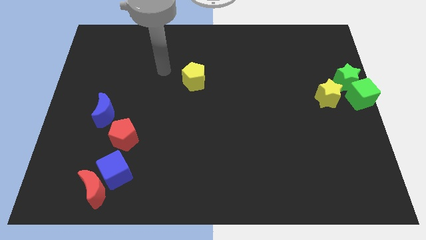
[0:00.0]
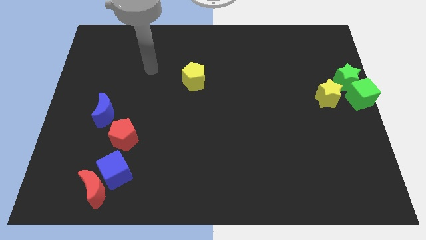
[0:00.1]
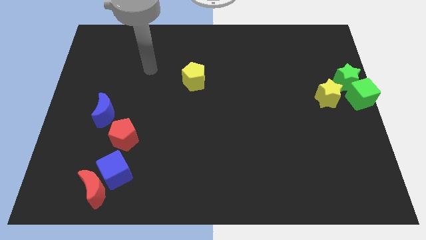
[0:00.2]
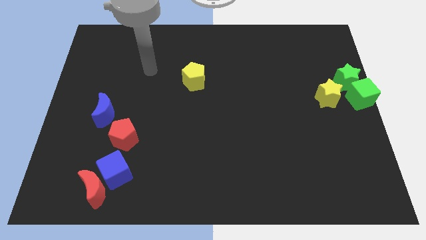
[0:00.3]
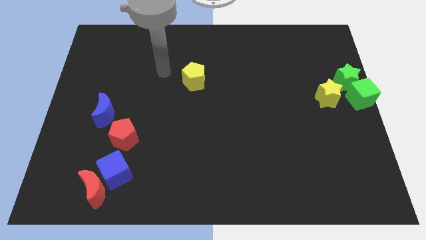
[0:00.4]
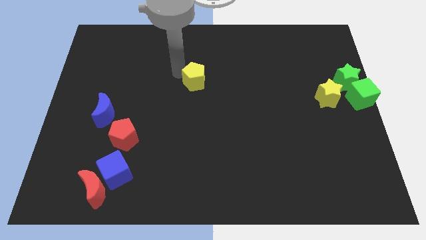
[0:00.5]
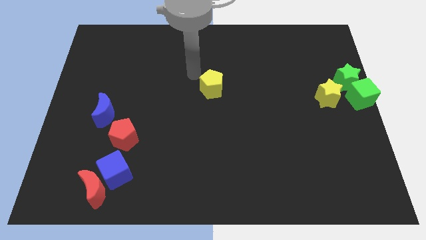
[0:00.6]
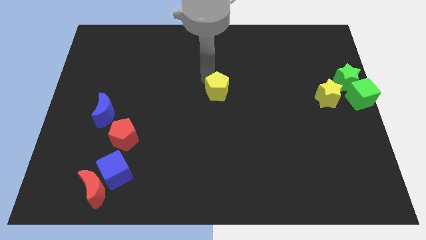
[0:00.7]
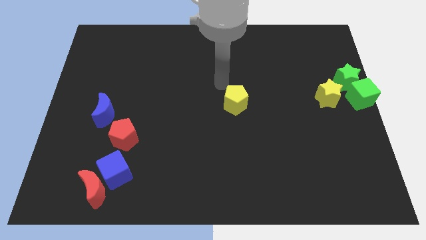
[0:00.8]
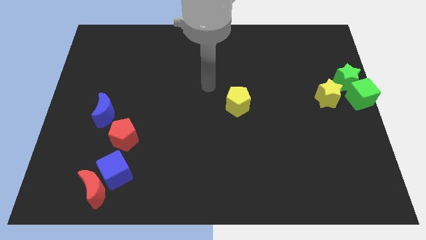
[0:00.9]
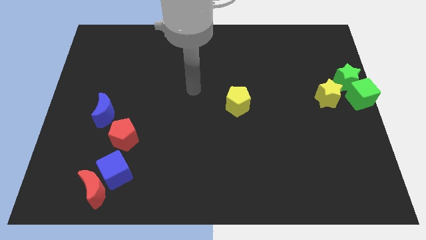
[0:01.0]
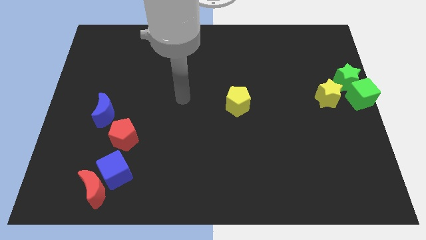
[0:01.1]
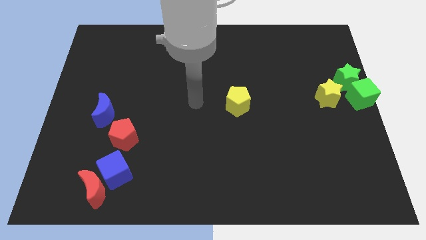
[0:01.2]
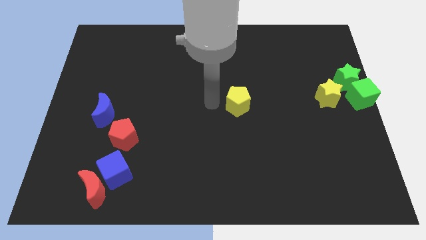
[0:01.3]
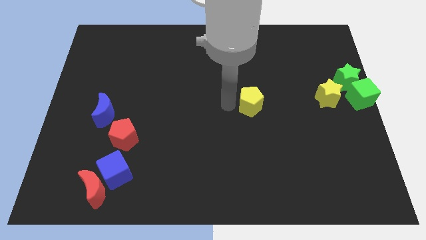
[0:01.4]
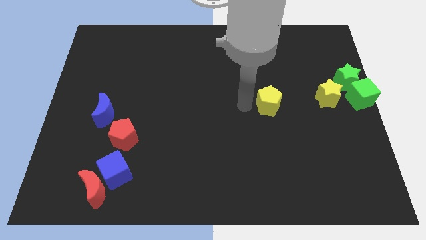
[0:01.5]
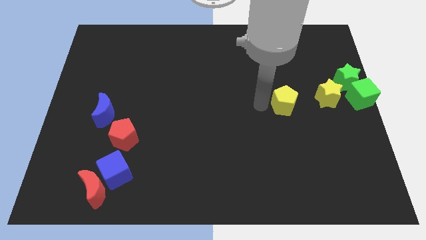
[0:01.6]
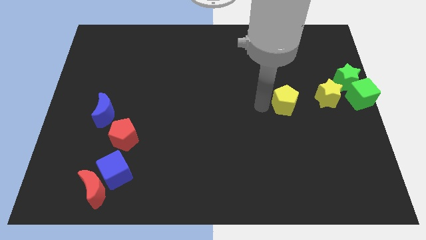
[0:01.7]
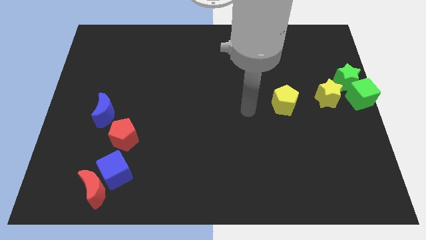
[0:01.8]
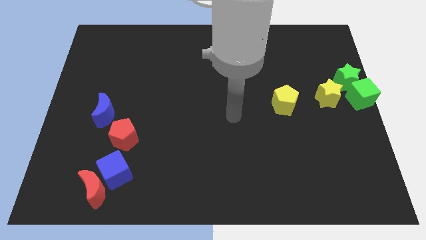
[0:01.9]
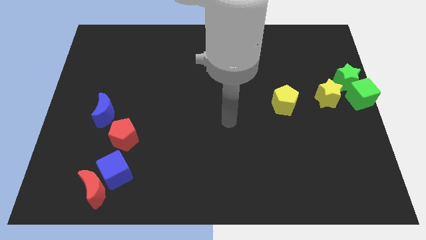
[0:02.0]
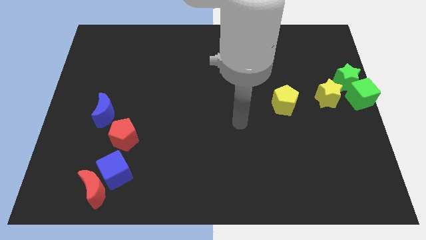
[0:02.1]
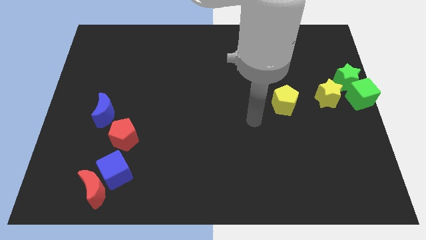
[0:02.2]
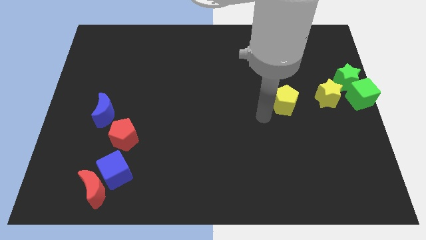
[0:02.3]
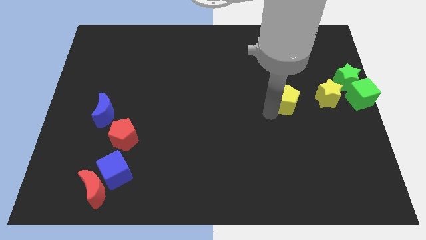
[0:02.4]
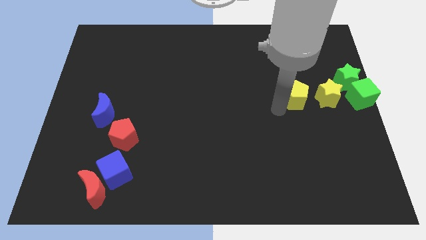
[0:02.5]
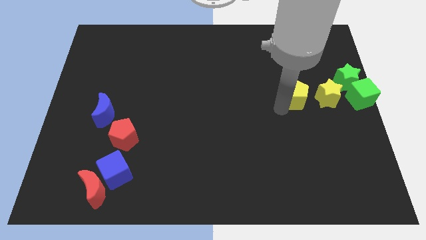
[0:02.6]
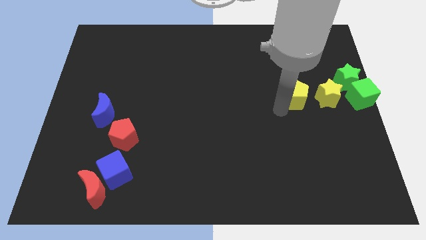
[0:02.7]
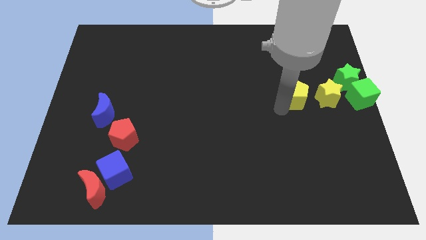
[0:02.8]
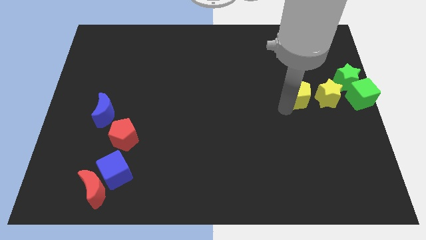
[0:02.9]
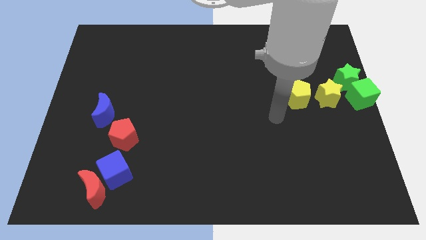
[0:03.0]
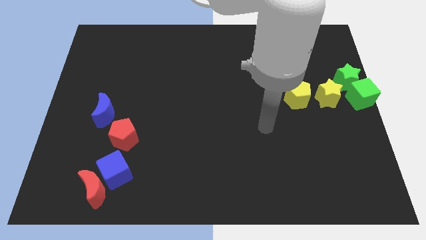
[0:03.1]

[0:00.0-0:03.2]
place yellow pentagon to the left of the yellow star

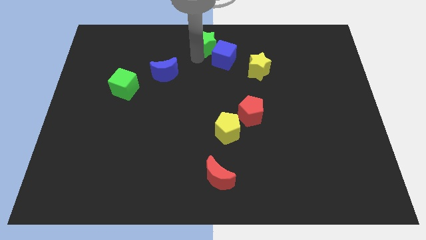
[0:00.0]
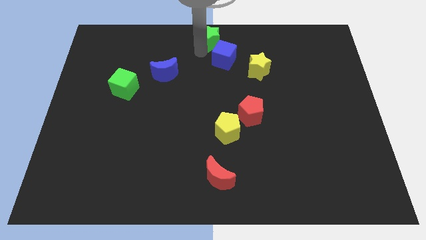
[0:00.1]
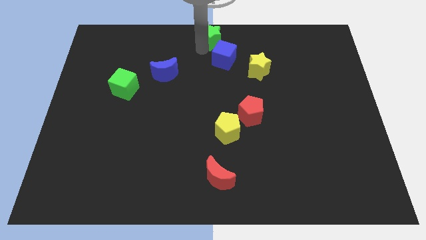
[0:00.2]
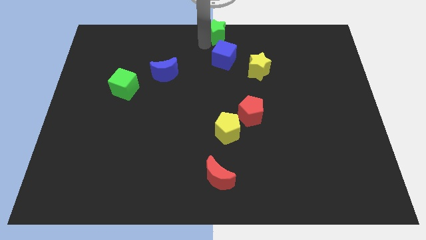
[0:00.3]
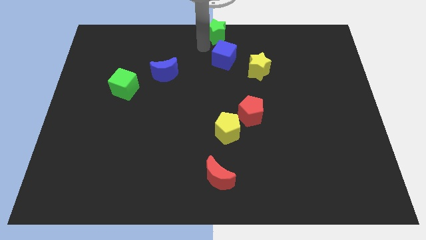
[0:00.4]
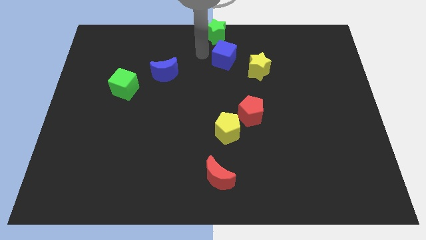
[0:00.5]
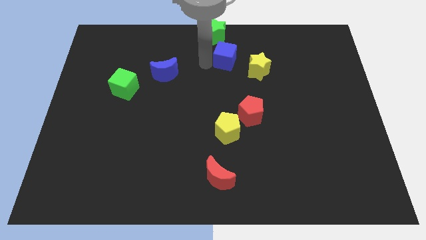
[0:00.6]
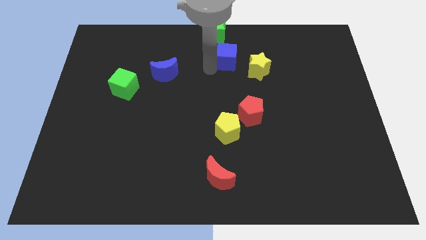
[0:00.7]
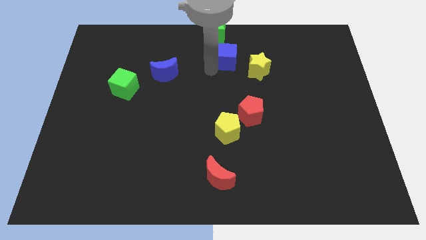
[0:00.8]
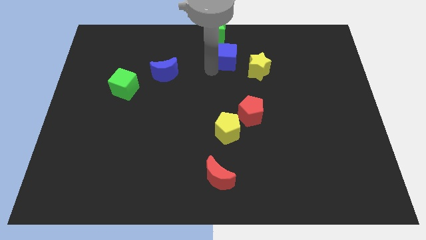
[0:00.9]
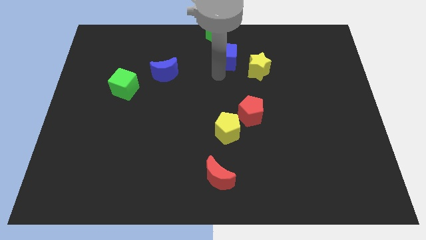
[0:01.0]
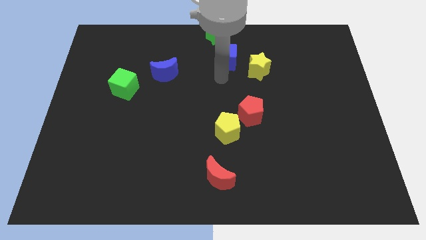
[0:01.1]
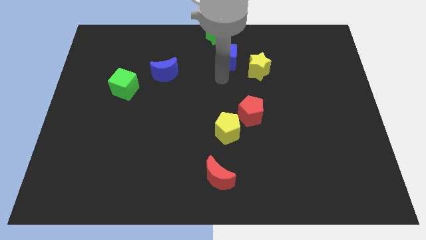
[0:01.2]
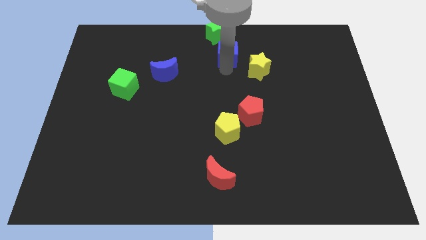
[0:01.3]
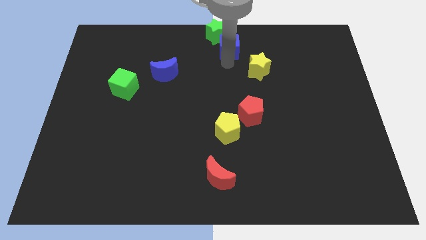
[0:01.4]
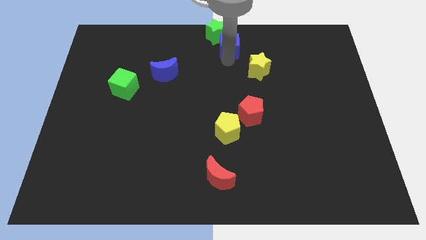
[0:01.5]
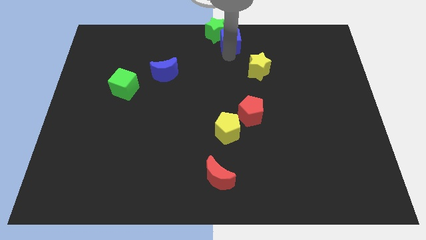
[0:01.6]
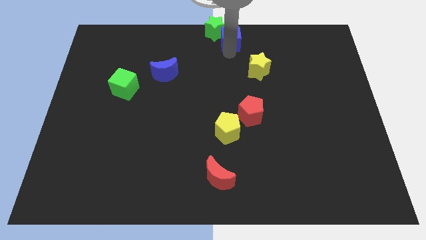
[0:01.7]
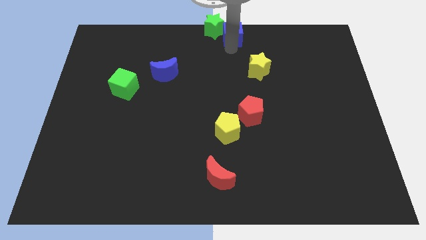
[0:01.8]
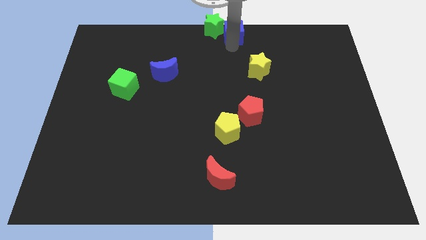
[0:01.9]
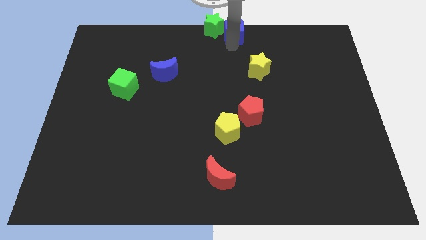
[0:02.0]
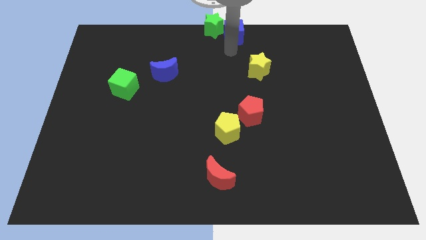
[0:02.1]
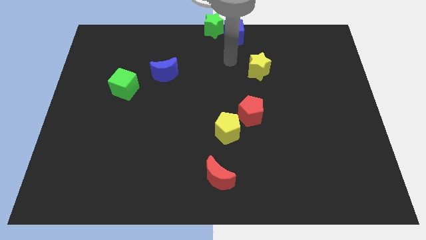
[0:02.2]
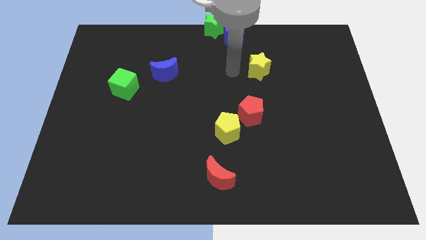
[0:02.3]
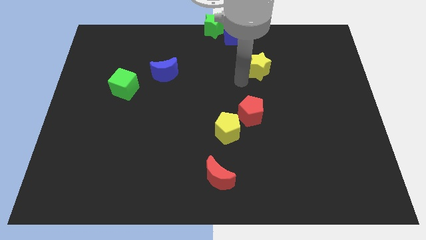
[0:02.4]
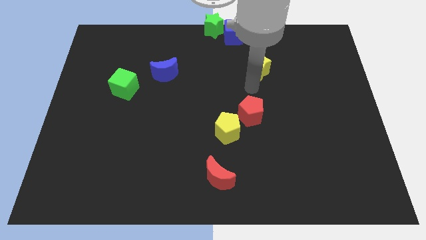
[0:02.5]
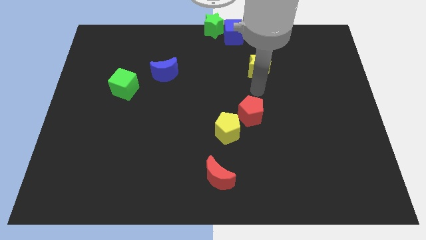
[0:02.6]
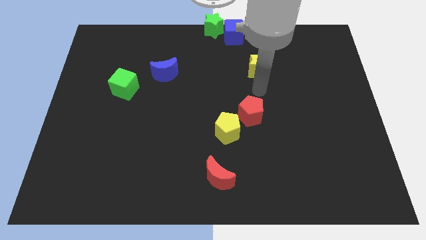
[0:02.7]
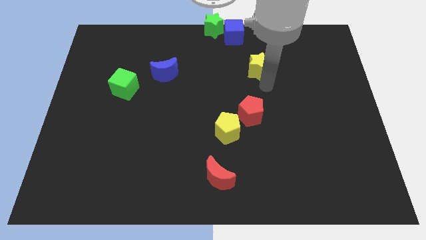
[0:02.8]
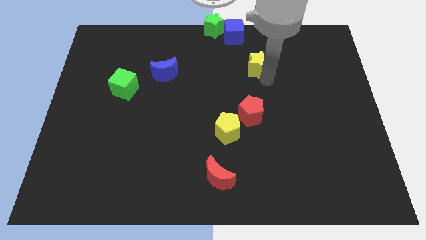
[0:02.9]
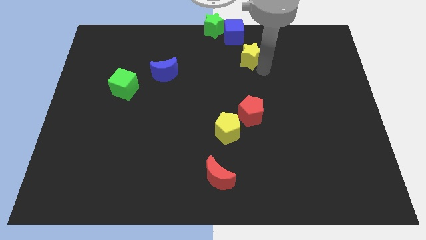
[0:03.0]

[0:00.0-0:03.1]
push the blue cube into the green star

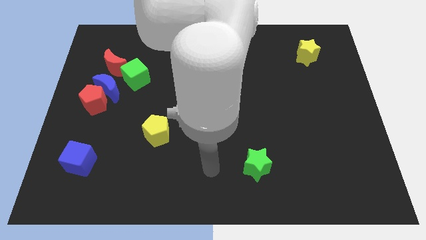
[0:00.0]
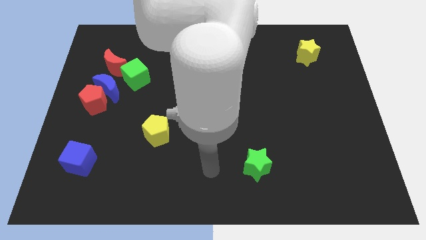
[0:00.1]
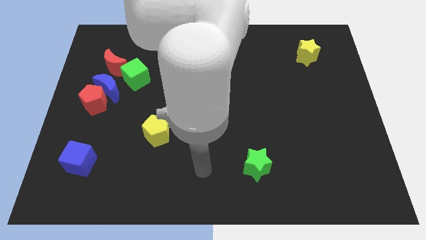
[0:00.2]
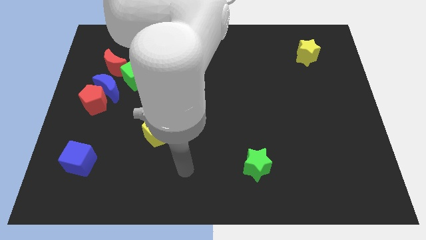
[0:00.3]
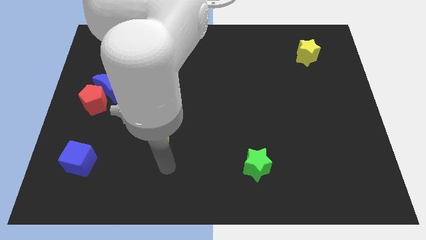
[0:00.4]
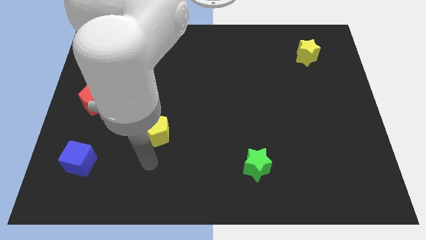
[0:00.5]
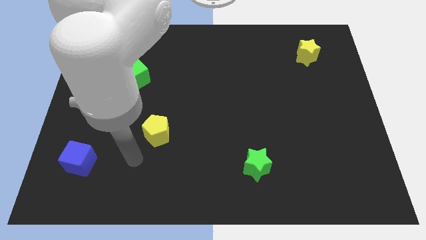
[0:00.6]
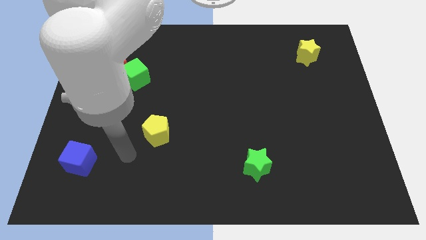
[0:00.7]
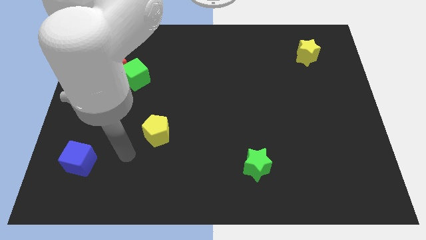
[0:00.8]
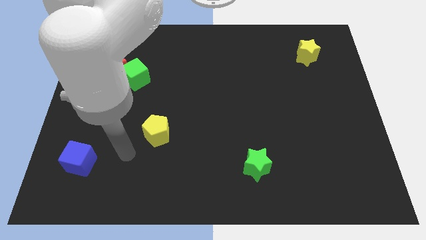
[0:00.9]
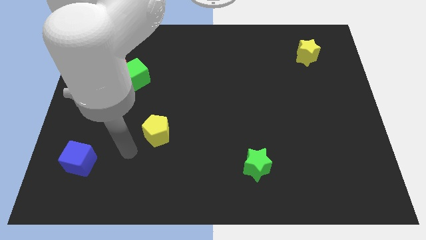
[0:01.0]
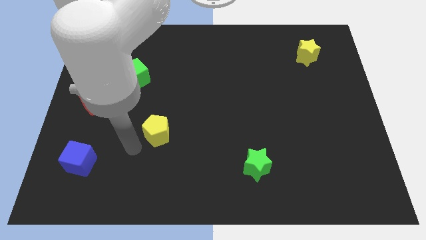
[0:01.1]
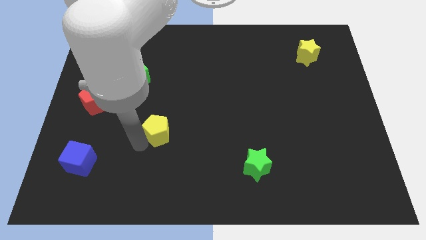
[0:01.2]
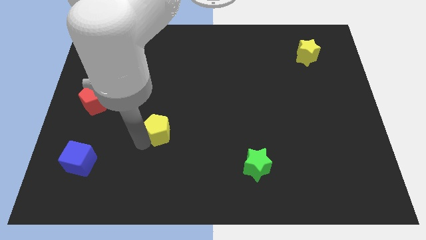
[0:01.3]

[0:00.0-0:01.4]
move your arm to the bottom left of the yellow pentagon

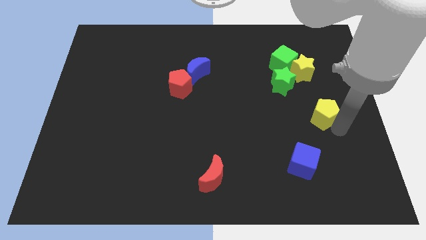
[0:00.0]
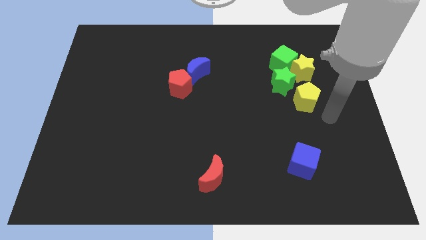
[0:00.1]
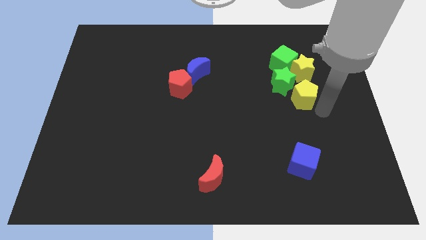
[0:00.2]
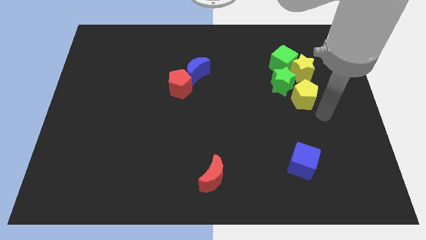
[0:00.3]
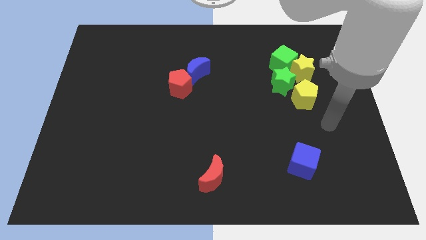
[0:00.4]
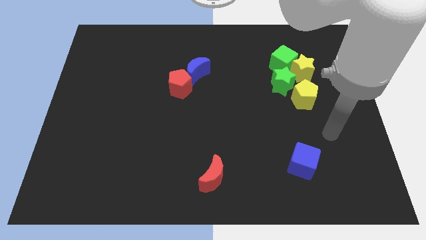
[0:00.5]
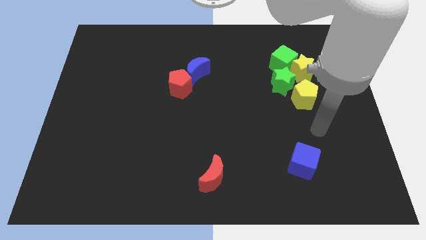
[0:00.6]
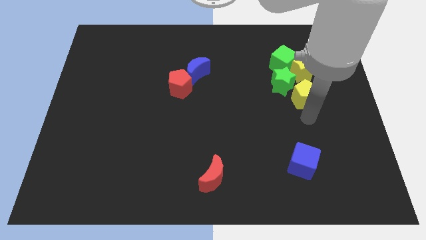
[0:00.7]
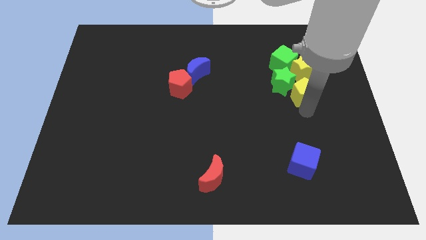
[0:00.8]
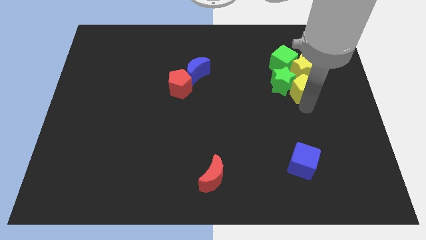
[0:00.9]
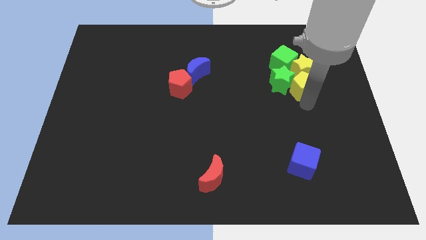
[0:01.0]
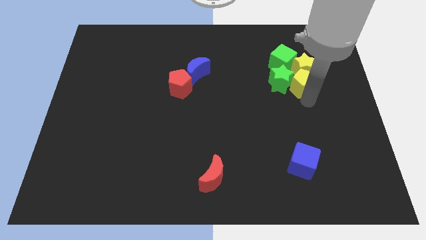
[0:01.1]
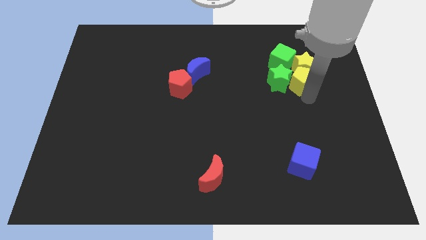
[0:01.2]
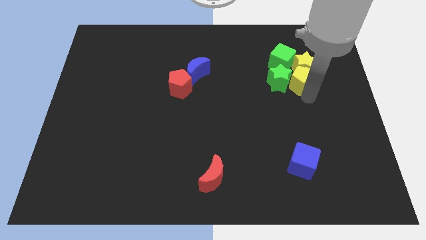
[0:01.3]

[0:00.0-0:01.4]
push the yellow pentagon into the yellow star

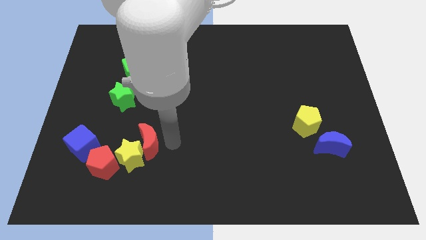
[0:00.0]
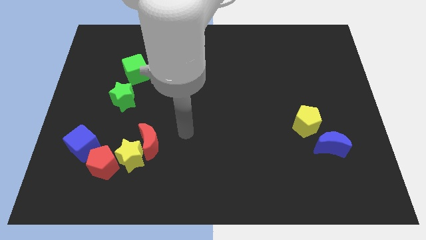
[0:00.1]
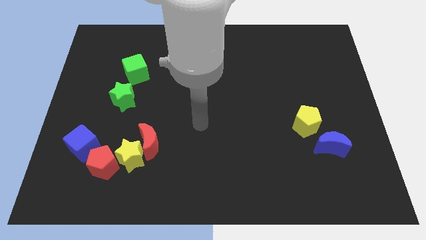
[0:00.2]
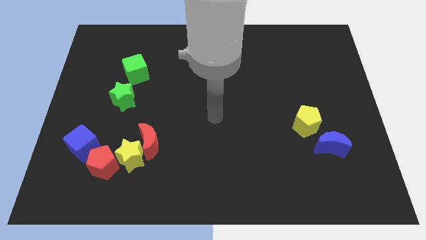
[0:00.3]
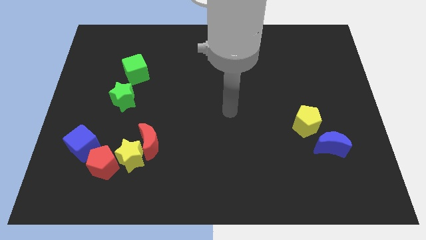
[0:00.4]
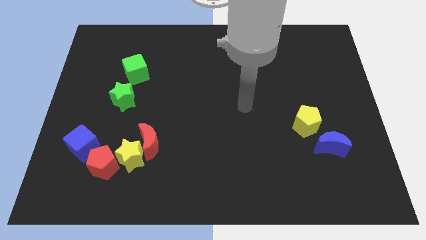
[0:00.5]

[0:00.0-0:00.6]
place your hand at center of the board
